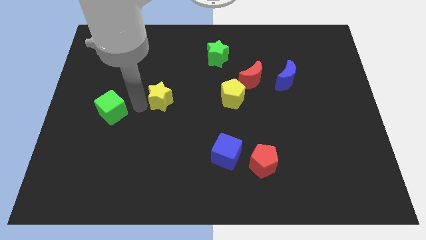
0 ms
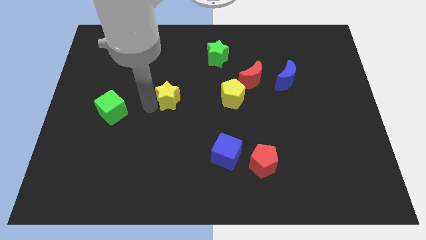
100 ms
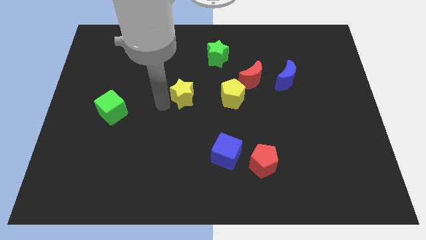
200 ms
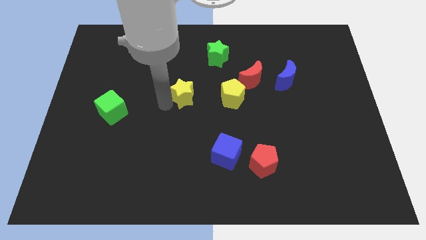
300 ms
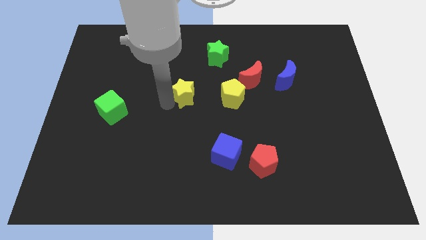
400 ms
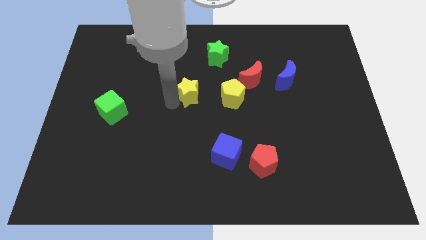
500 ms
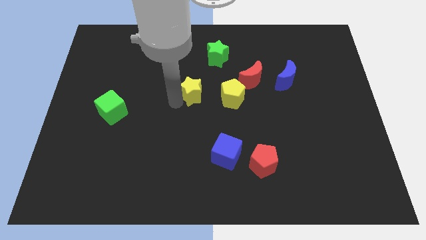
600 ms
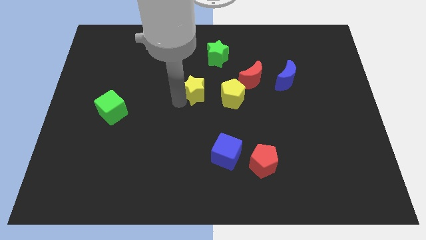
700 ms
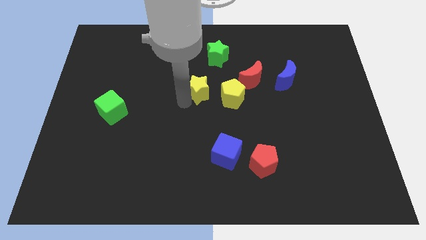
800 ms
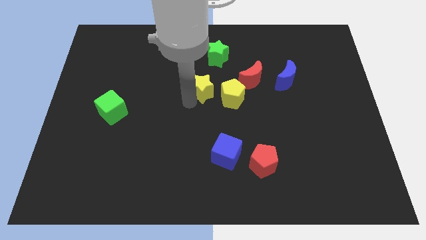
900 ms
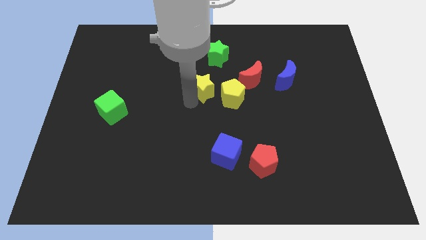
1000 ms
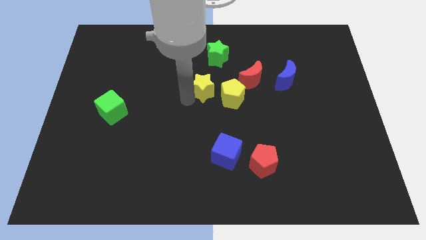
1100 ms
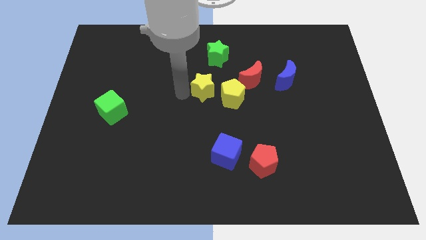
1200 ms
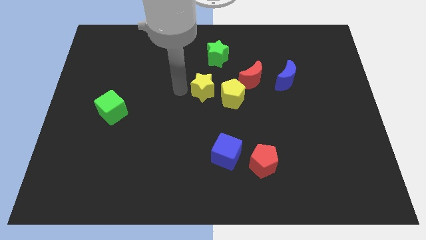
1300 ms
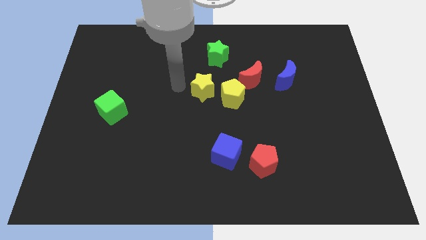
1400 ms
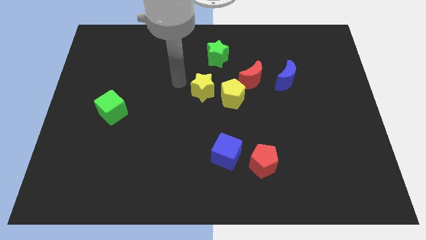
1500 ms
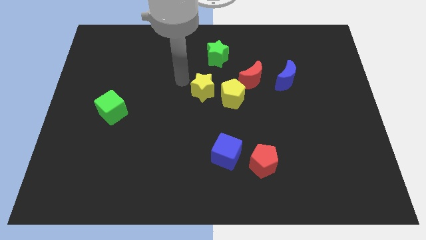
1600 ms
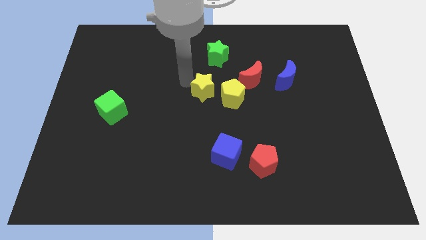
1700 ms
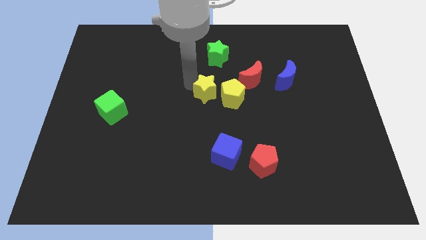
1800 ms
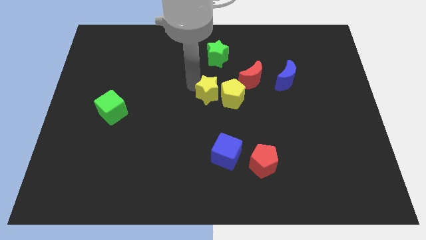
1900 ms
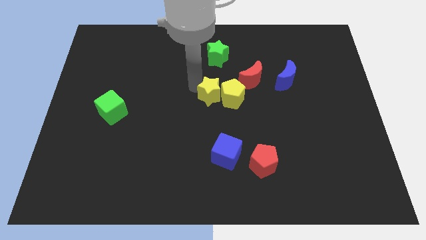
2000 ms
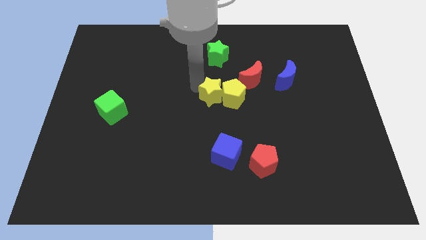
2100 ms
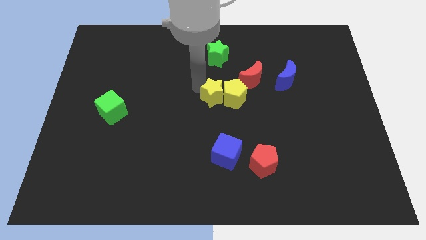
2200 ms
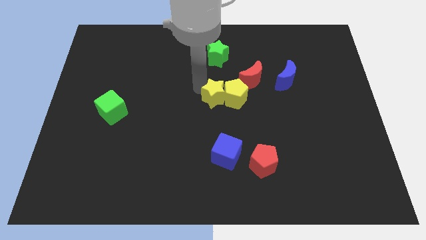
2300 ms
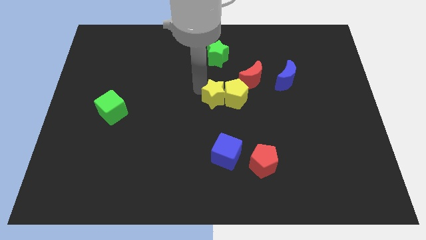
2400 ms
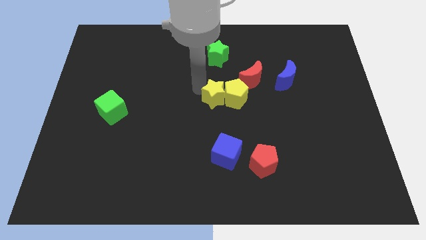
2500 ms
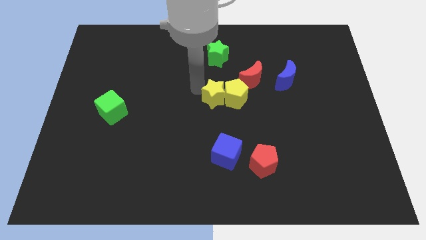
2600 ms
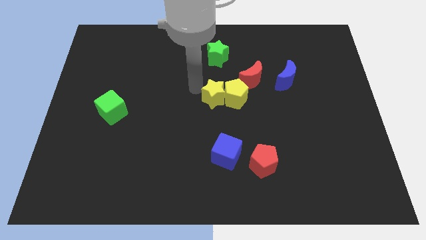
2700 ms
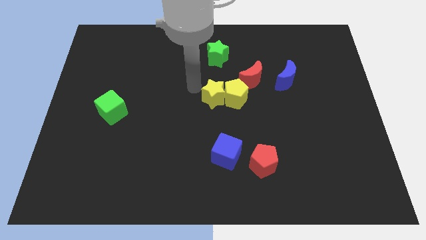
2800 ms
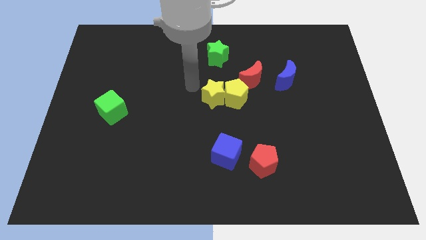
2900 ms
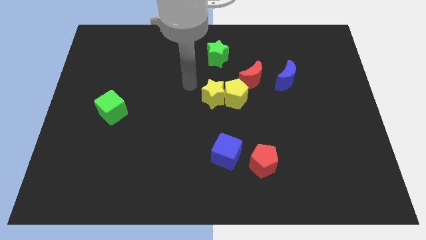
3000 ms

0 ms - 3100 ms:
place the yellow blocks at the center of the board

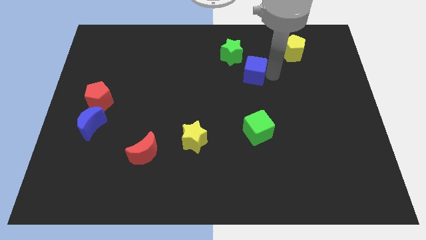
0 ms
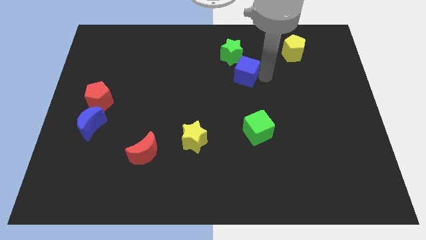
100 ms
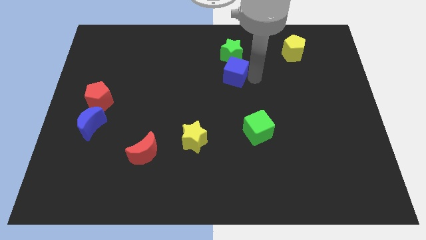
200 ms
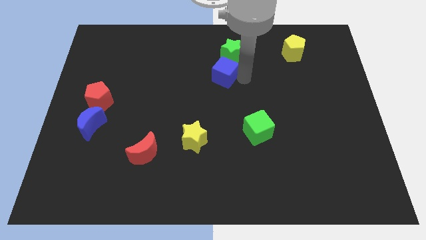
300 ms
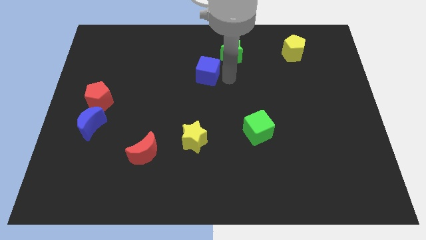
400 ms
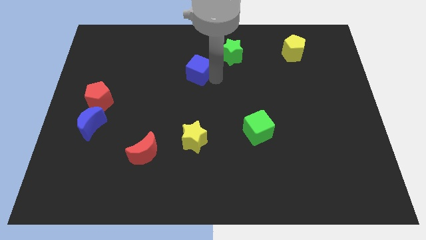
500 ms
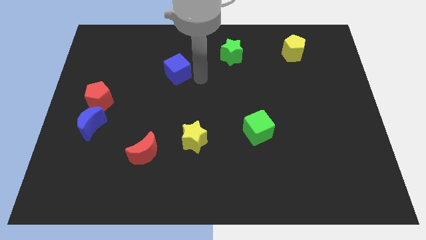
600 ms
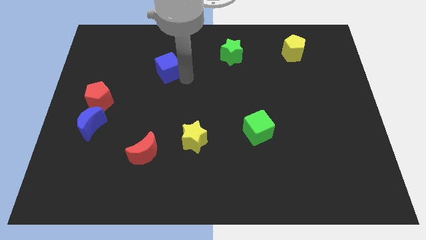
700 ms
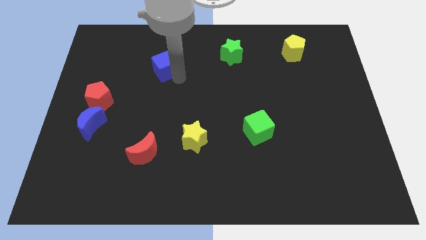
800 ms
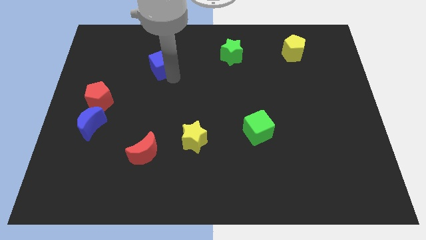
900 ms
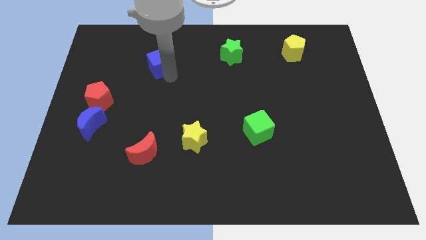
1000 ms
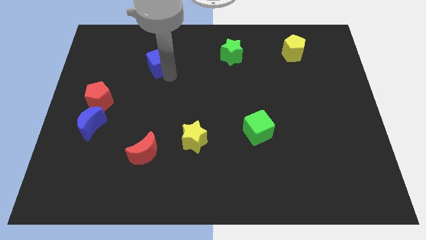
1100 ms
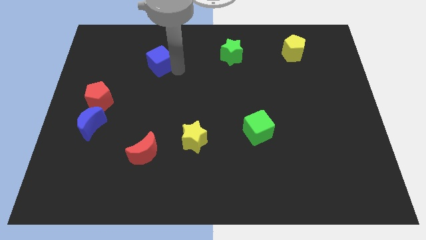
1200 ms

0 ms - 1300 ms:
slide the blue cube to the left side of the table

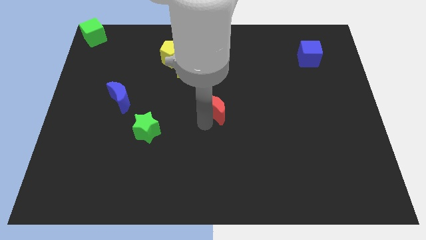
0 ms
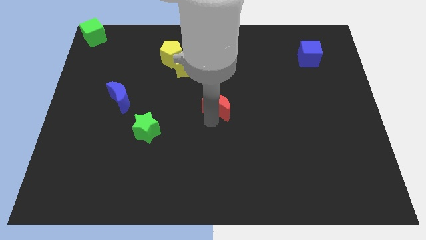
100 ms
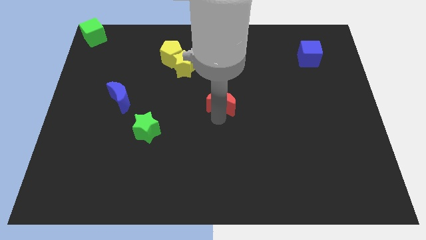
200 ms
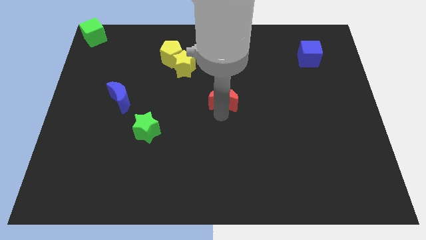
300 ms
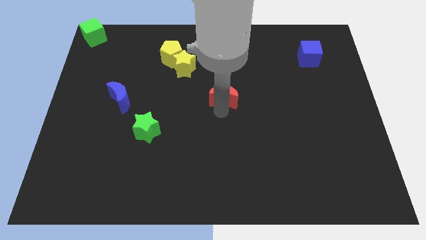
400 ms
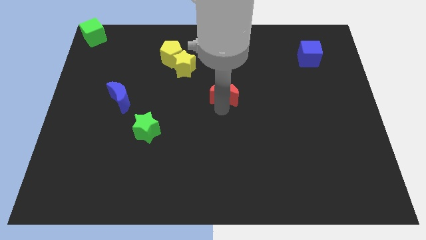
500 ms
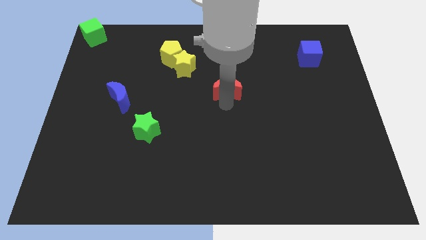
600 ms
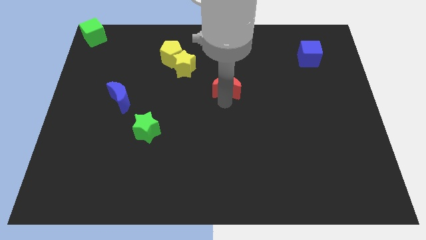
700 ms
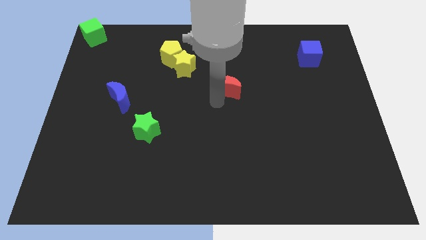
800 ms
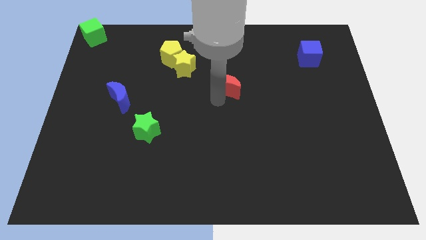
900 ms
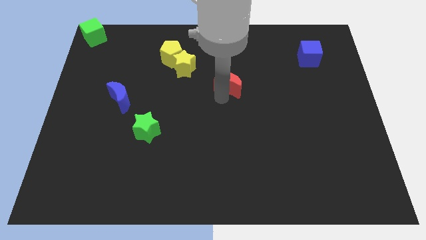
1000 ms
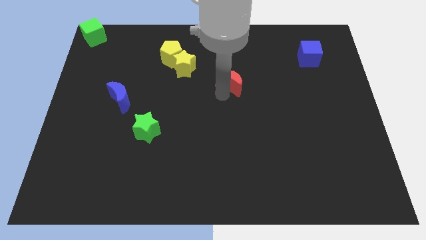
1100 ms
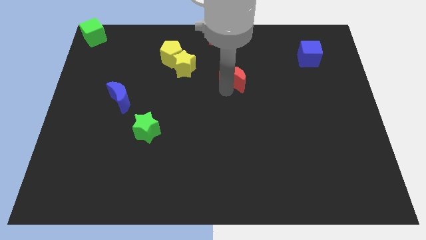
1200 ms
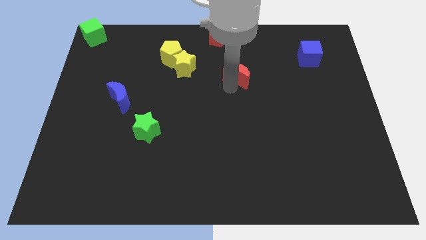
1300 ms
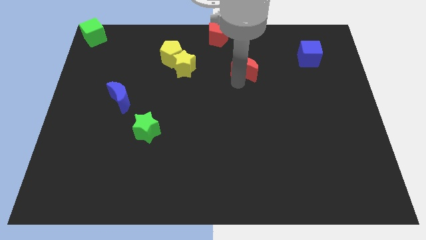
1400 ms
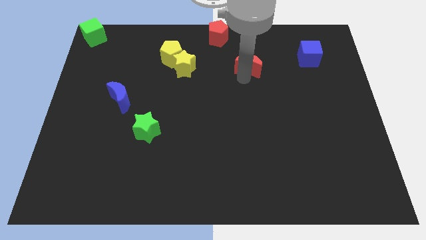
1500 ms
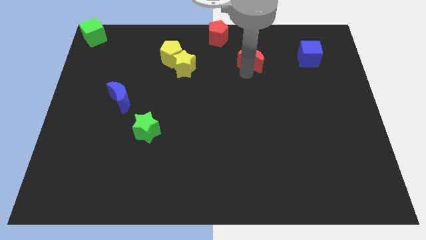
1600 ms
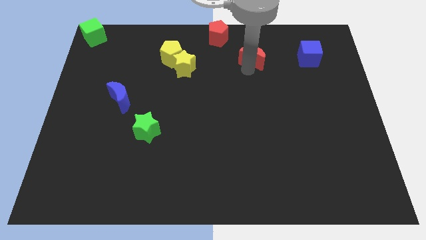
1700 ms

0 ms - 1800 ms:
place the red moon in between yellow star and blue cube

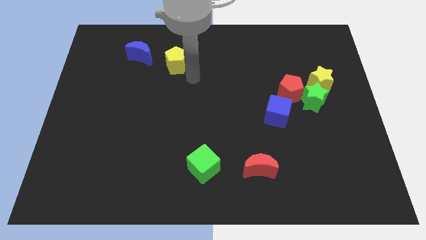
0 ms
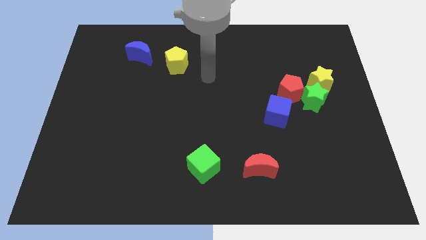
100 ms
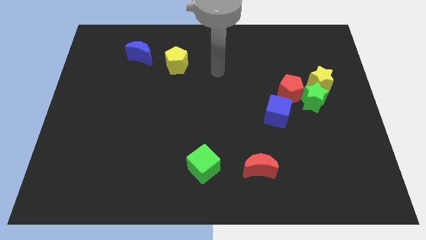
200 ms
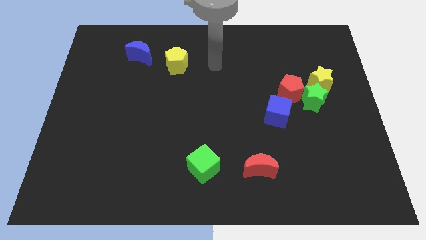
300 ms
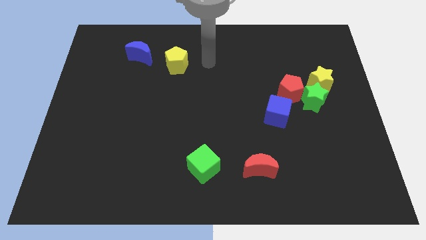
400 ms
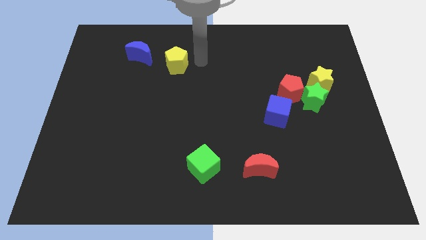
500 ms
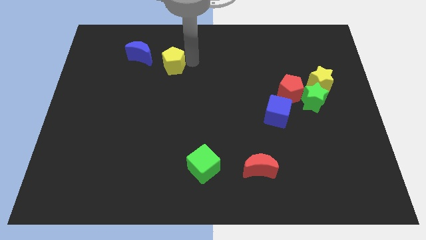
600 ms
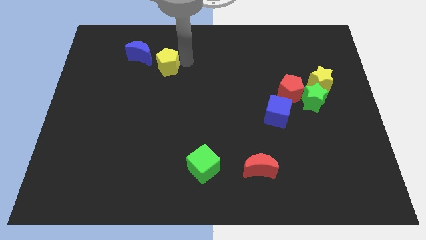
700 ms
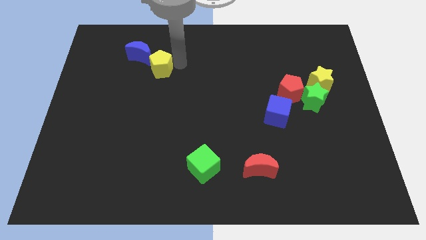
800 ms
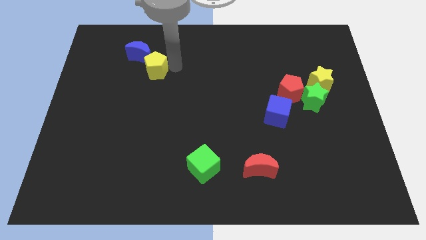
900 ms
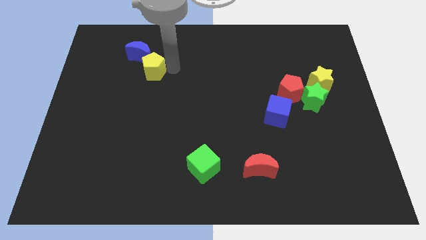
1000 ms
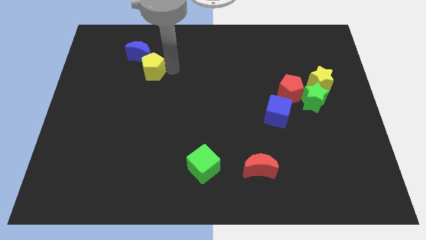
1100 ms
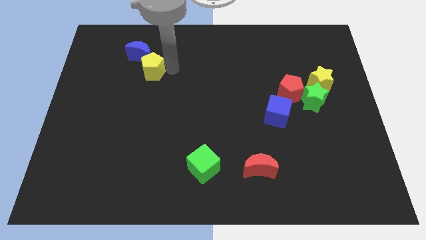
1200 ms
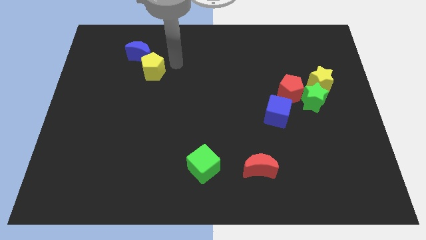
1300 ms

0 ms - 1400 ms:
push the yellow pentagon towards the blue crescent on top left of board

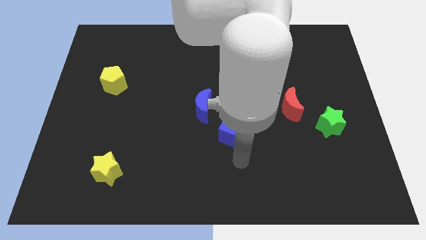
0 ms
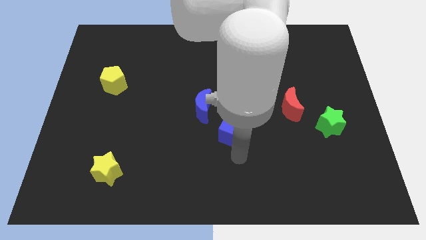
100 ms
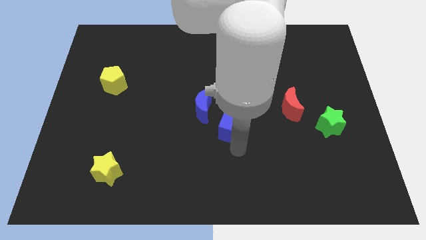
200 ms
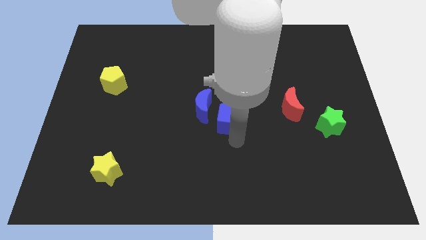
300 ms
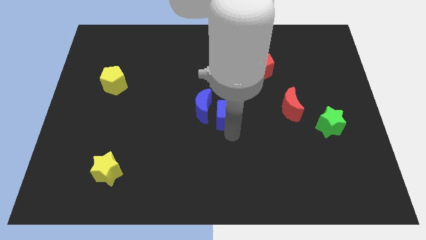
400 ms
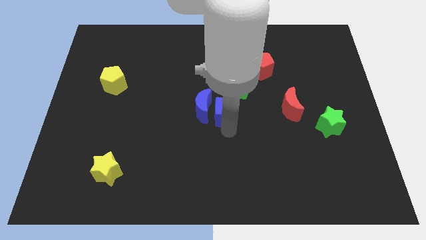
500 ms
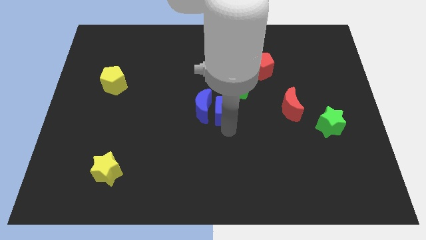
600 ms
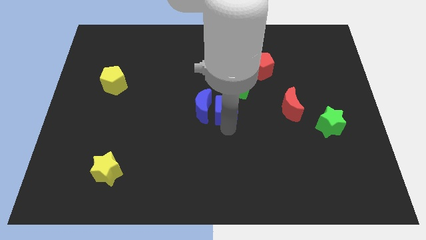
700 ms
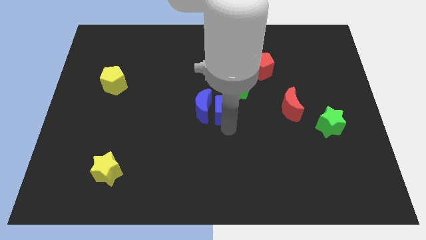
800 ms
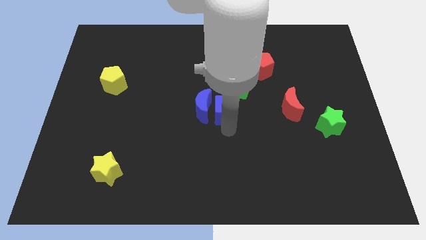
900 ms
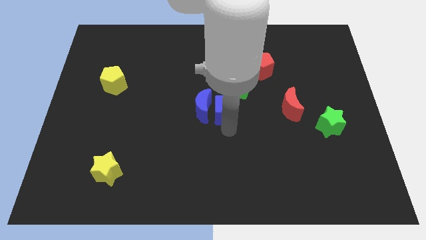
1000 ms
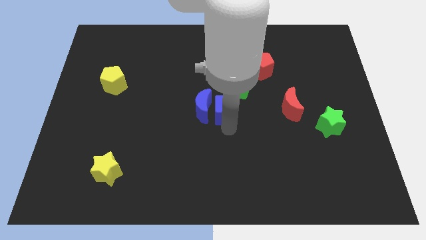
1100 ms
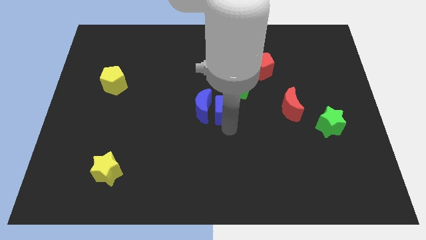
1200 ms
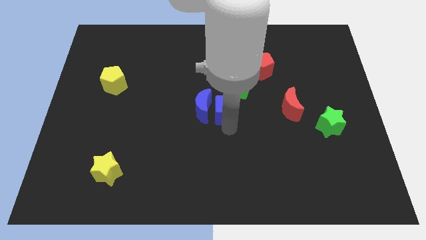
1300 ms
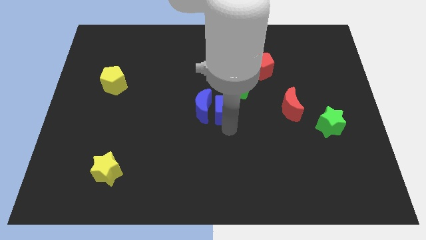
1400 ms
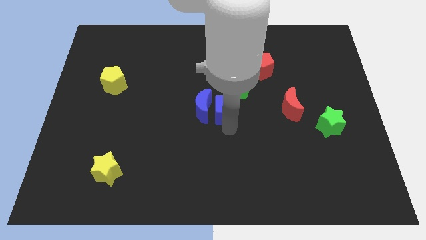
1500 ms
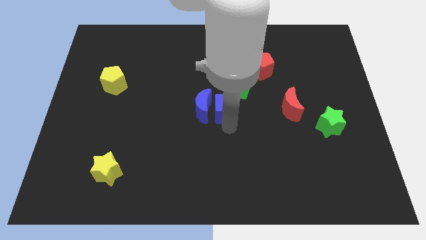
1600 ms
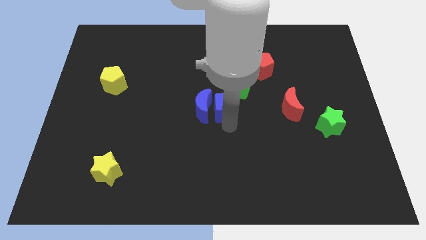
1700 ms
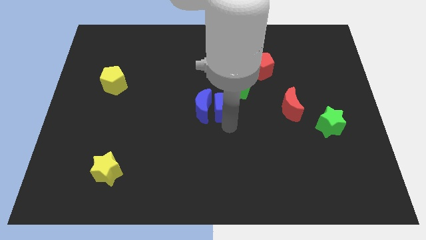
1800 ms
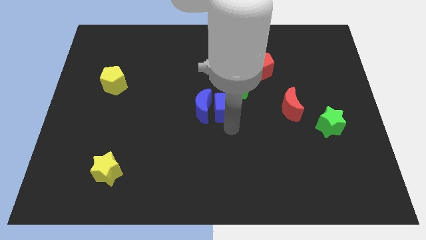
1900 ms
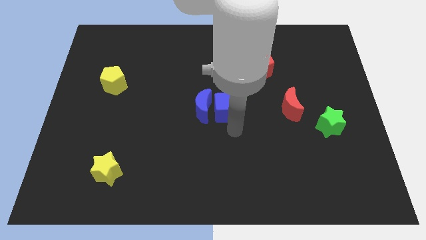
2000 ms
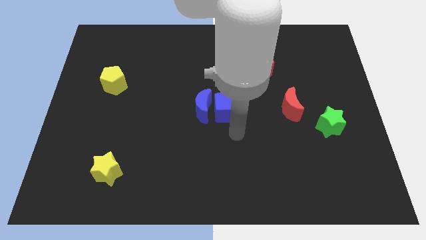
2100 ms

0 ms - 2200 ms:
drag the blue cube slightly upwards
